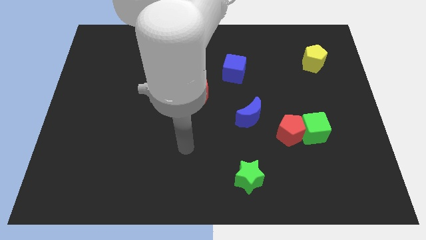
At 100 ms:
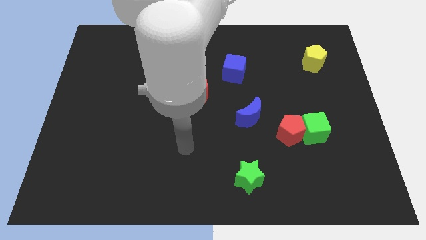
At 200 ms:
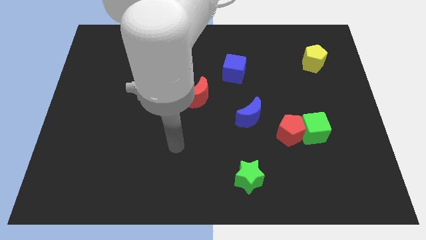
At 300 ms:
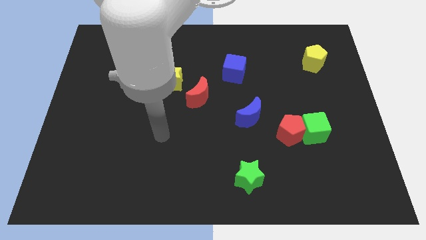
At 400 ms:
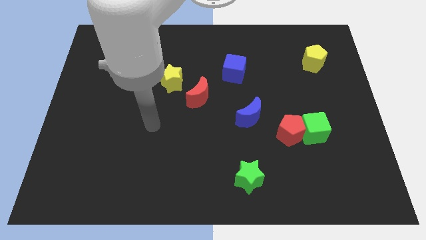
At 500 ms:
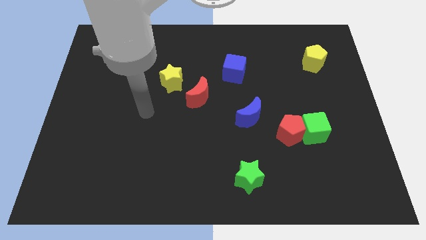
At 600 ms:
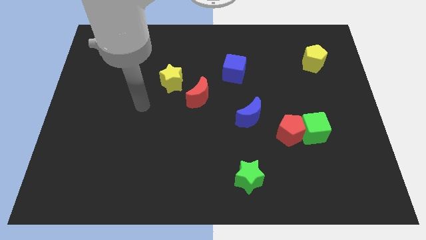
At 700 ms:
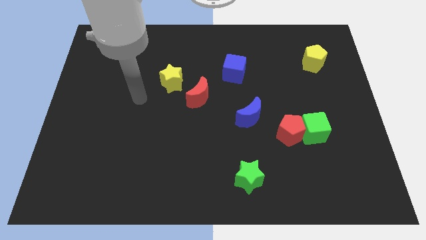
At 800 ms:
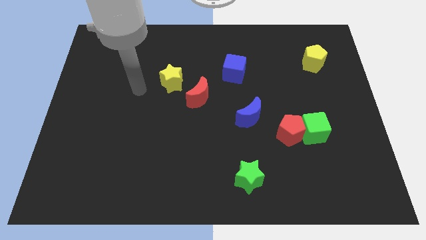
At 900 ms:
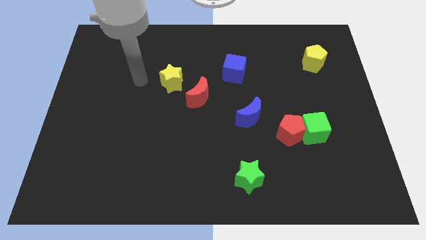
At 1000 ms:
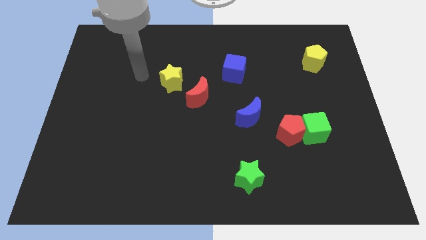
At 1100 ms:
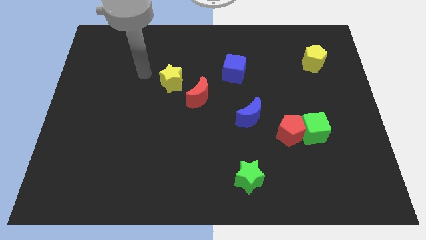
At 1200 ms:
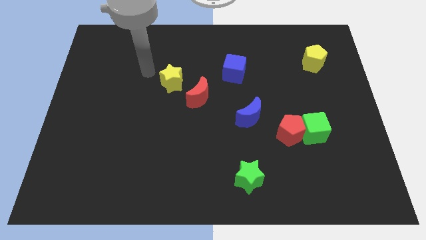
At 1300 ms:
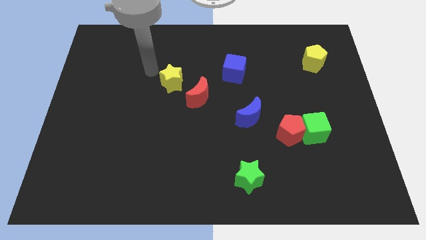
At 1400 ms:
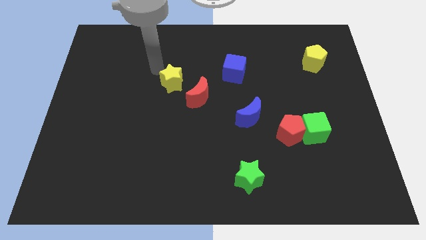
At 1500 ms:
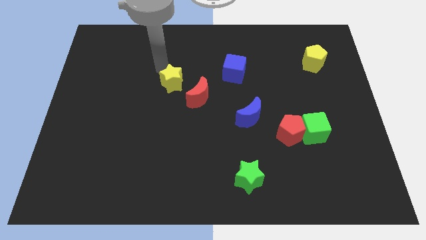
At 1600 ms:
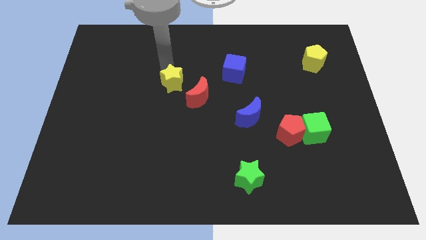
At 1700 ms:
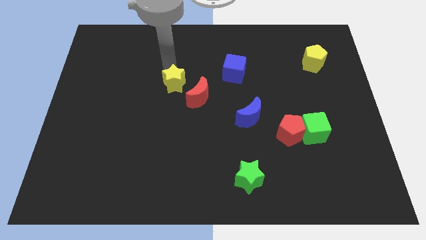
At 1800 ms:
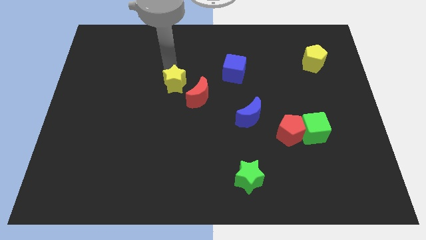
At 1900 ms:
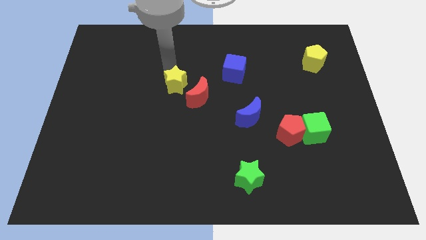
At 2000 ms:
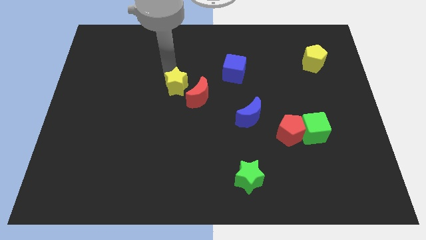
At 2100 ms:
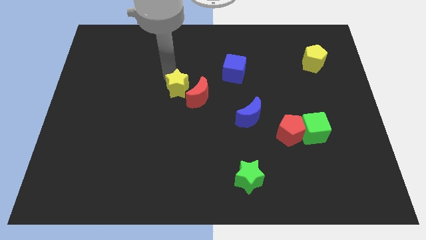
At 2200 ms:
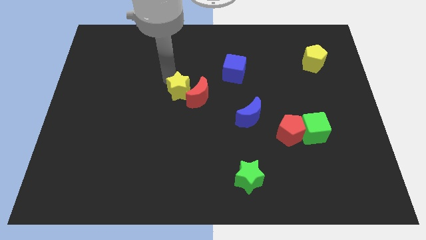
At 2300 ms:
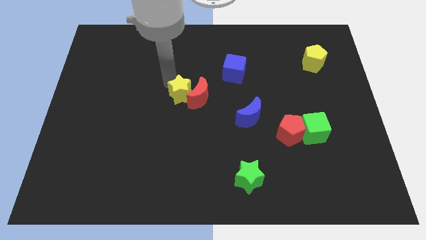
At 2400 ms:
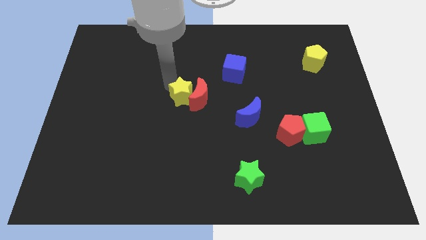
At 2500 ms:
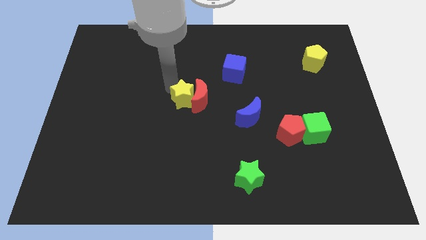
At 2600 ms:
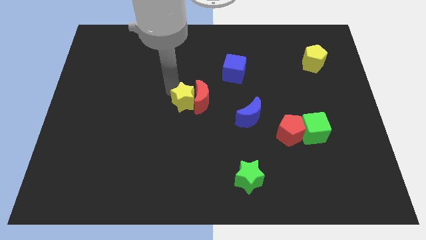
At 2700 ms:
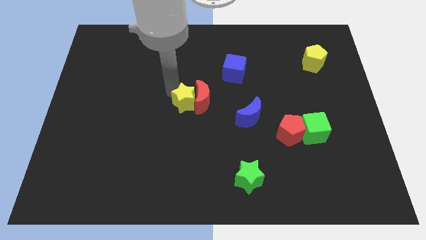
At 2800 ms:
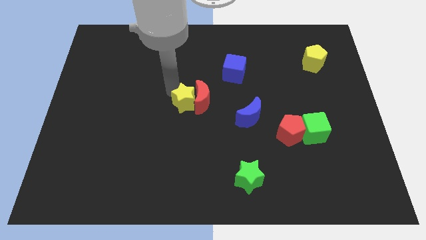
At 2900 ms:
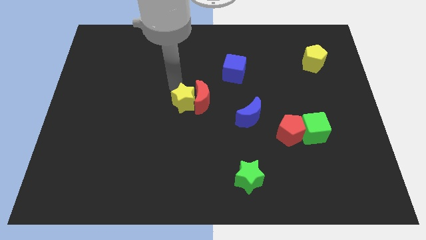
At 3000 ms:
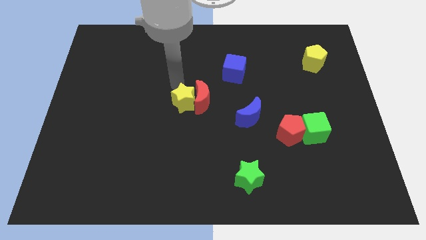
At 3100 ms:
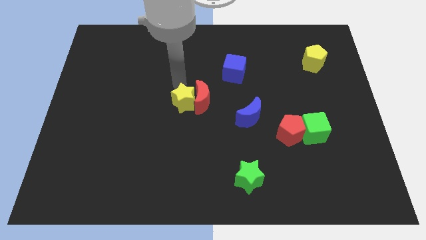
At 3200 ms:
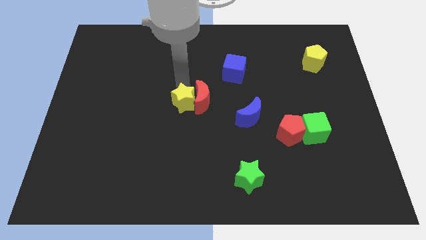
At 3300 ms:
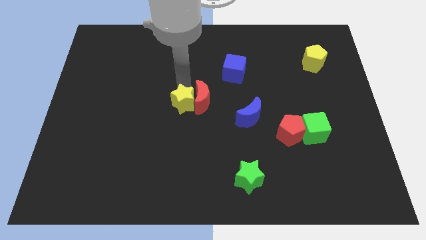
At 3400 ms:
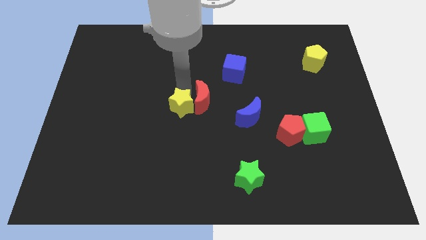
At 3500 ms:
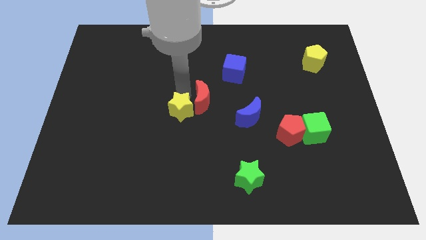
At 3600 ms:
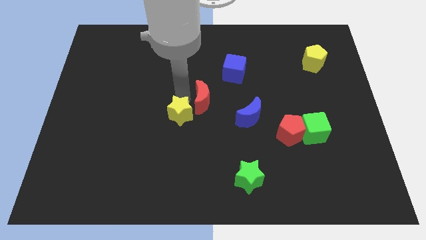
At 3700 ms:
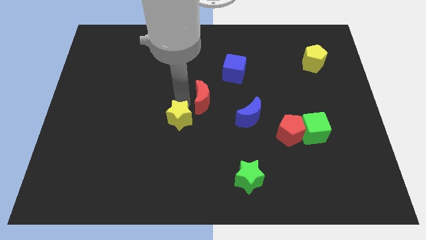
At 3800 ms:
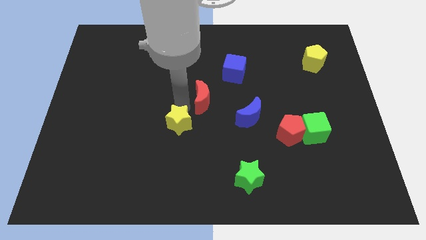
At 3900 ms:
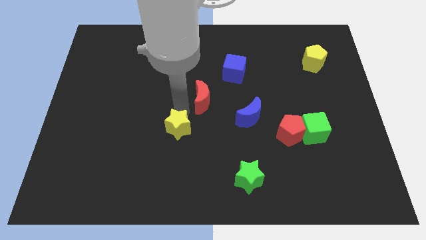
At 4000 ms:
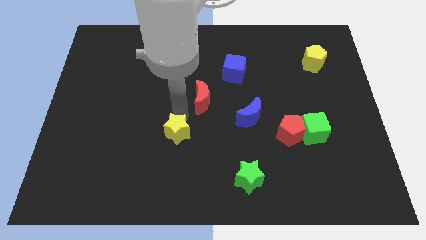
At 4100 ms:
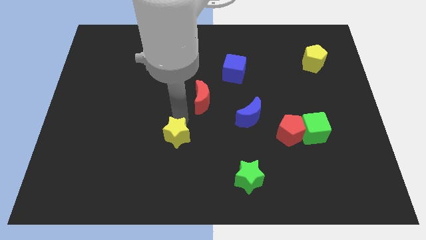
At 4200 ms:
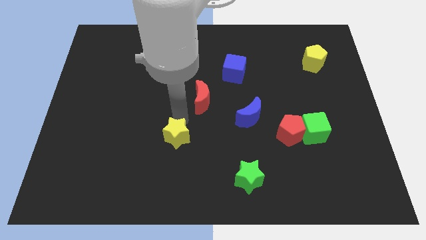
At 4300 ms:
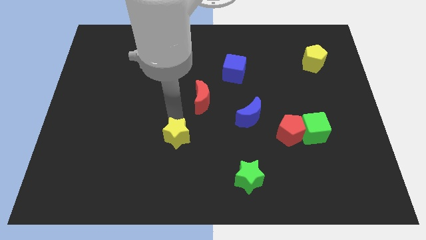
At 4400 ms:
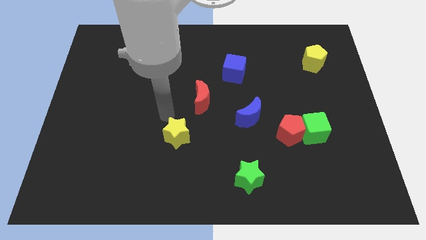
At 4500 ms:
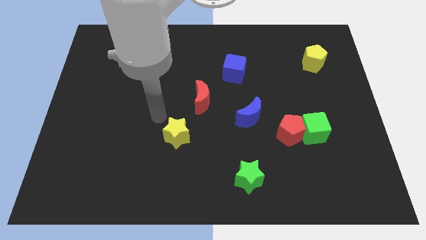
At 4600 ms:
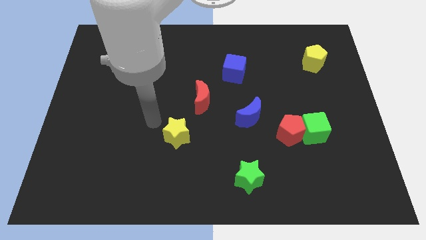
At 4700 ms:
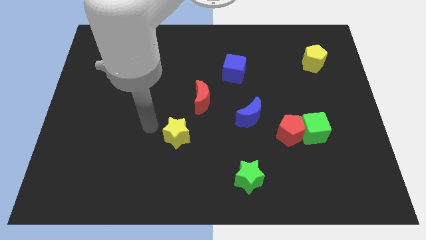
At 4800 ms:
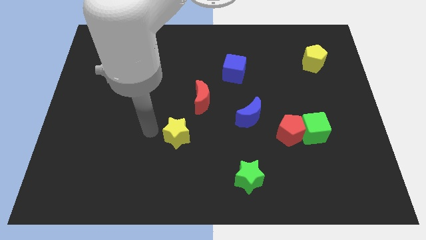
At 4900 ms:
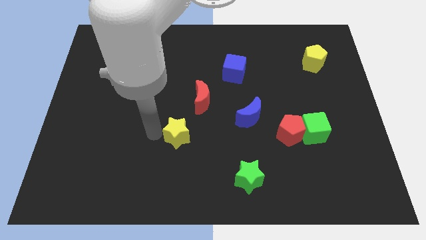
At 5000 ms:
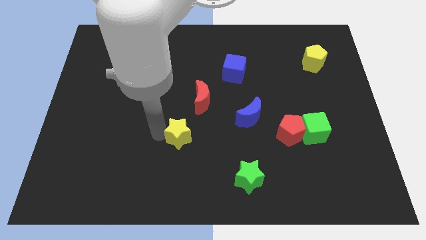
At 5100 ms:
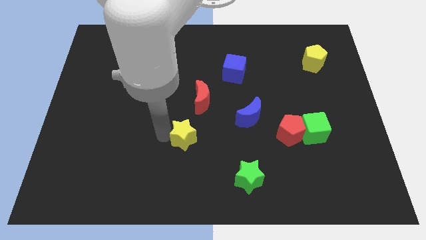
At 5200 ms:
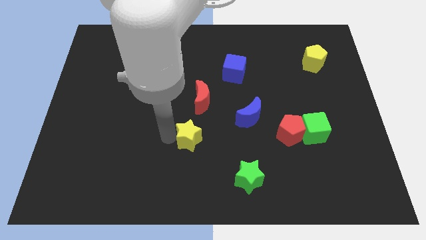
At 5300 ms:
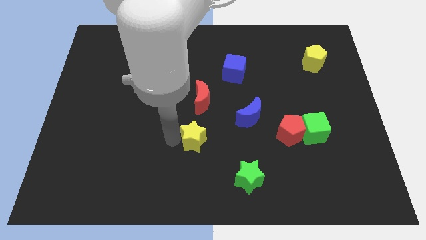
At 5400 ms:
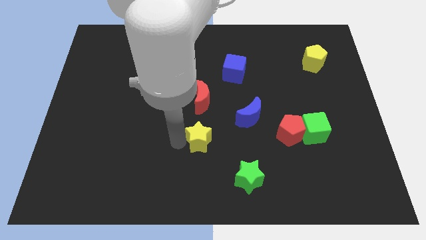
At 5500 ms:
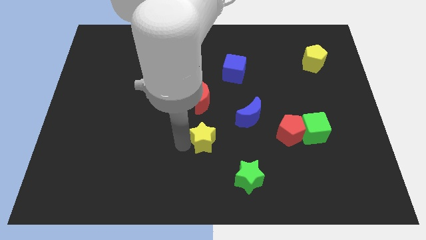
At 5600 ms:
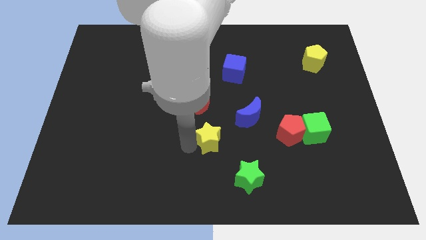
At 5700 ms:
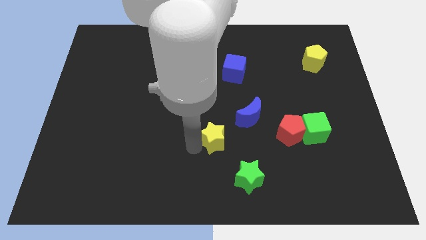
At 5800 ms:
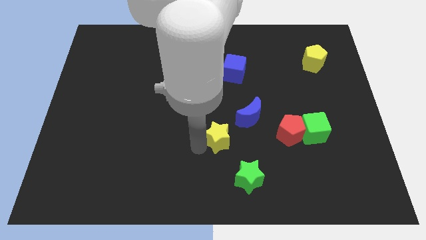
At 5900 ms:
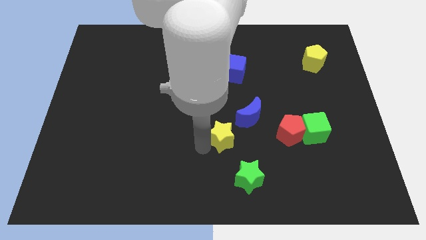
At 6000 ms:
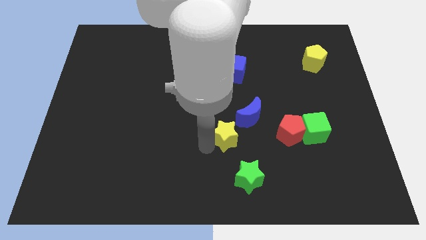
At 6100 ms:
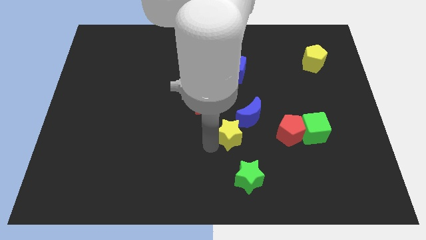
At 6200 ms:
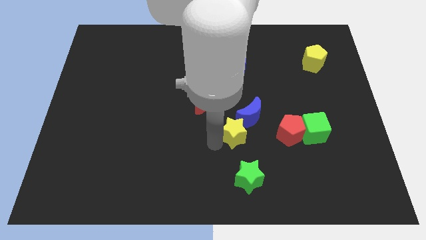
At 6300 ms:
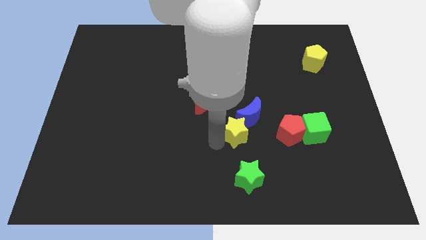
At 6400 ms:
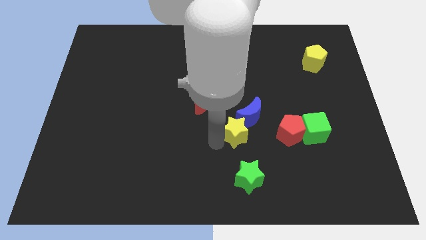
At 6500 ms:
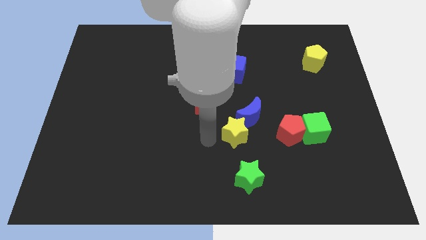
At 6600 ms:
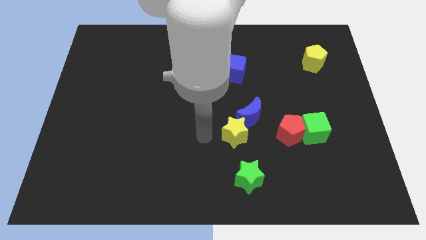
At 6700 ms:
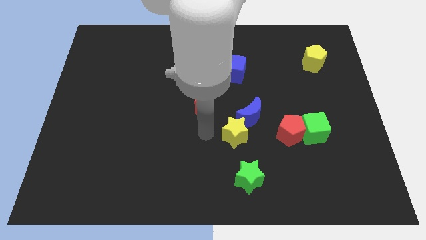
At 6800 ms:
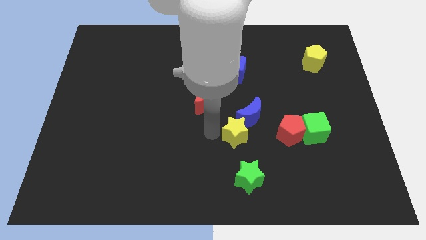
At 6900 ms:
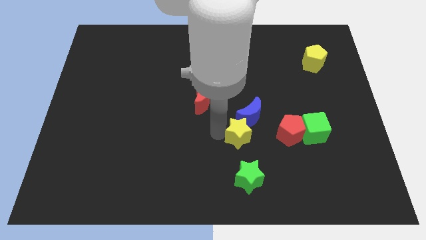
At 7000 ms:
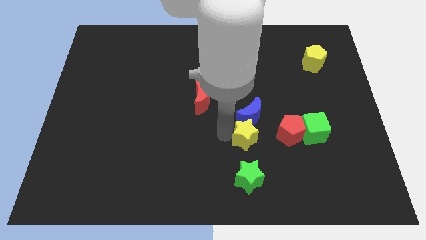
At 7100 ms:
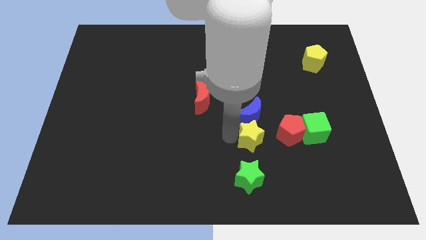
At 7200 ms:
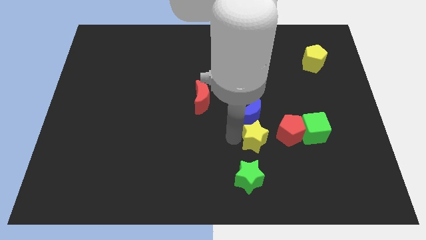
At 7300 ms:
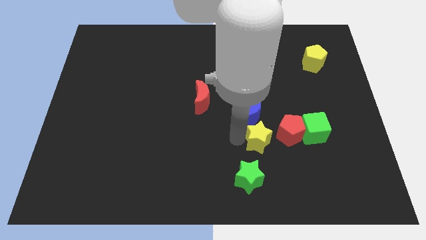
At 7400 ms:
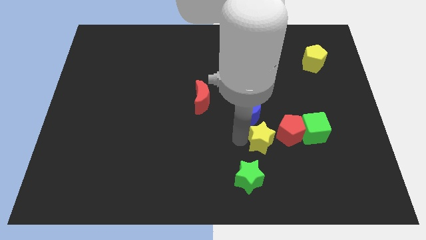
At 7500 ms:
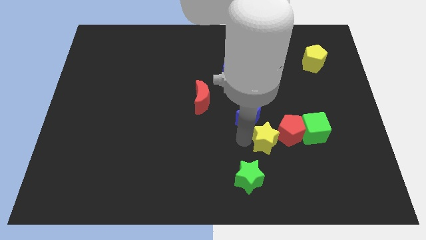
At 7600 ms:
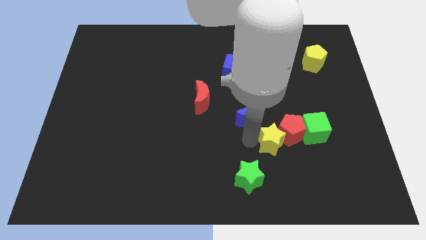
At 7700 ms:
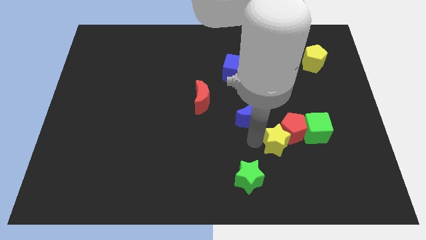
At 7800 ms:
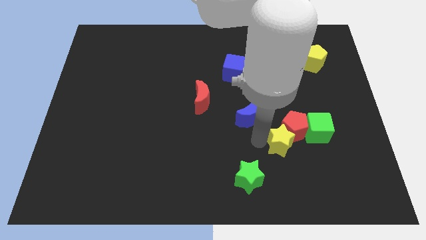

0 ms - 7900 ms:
move the yellow star towards the red pentagon

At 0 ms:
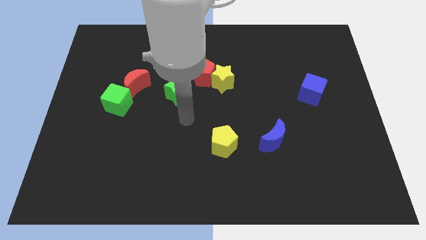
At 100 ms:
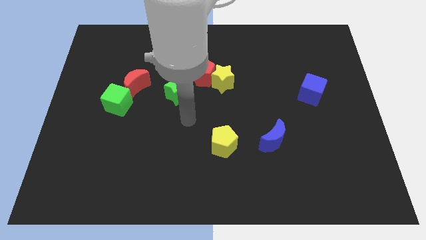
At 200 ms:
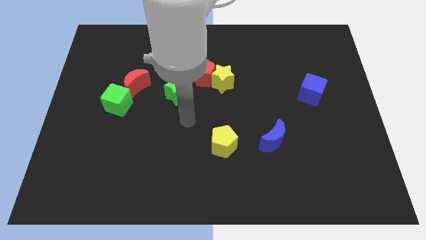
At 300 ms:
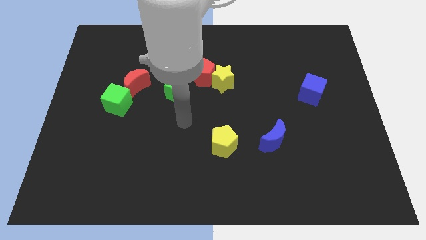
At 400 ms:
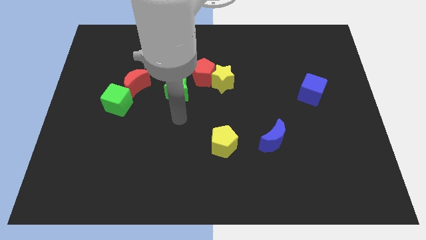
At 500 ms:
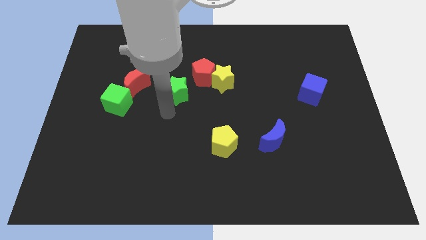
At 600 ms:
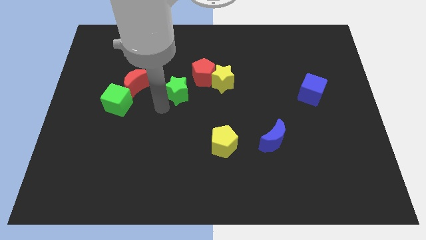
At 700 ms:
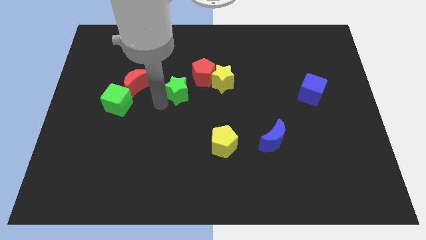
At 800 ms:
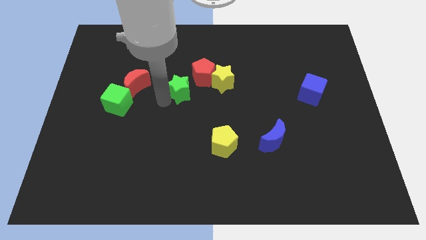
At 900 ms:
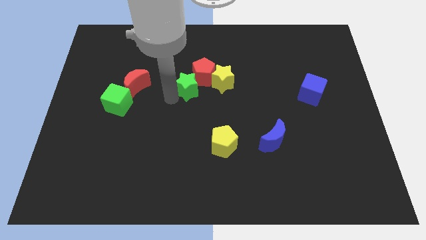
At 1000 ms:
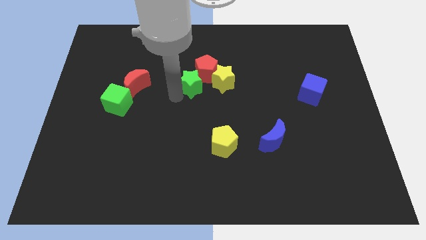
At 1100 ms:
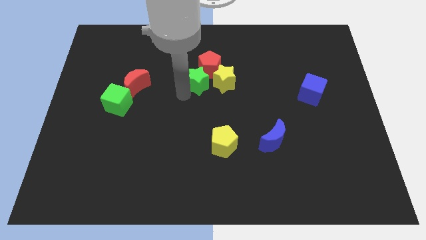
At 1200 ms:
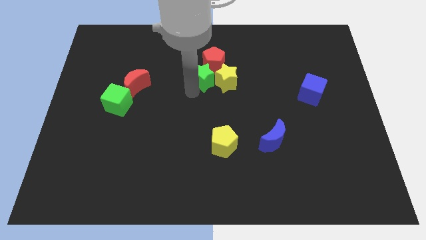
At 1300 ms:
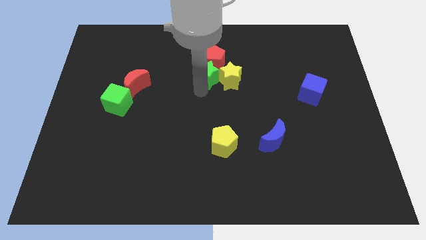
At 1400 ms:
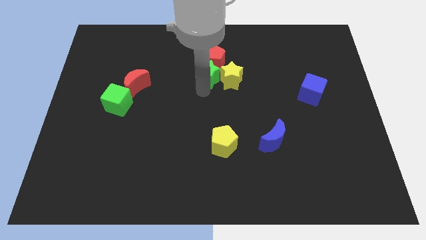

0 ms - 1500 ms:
push the green star towards the yellow star
